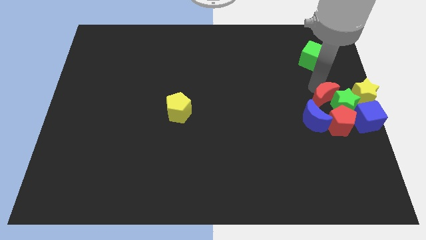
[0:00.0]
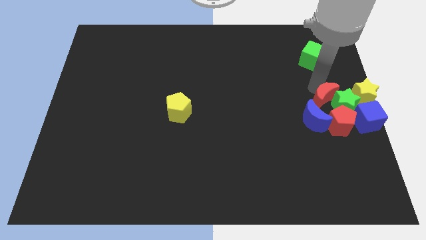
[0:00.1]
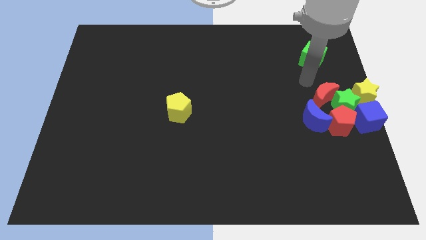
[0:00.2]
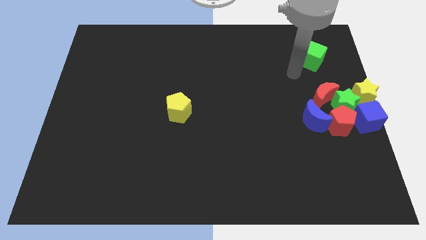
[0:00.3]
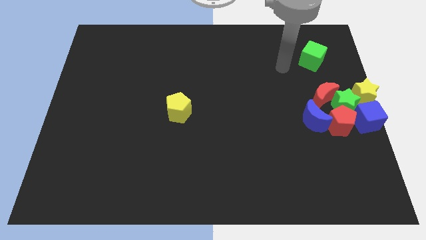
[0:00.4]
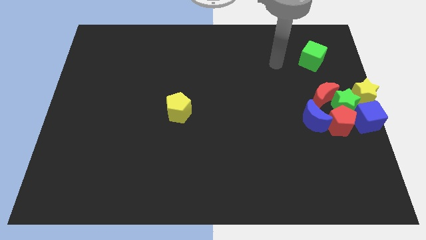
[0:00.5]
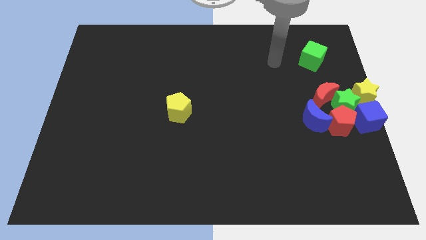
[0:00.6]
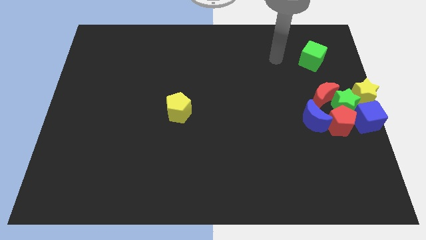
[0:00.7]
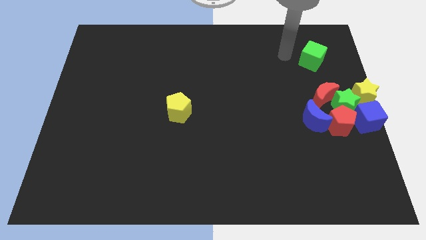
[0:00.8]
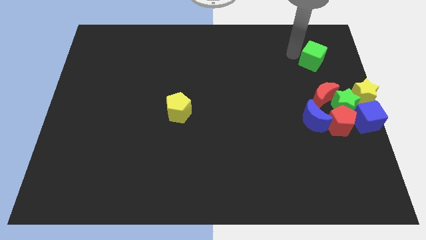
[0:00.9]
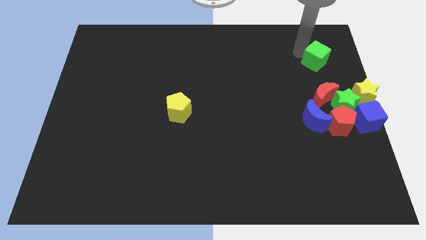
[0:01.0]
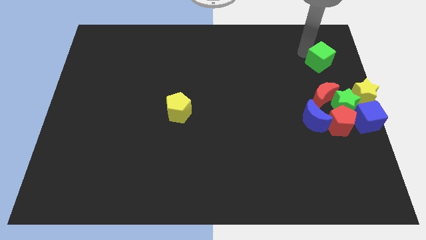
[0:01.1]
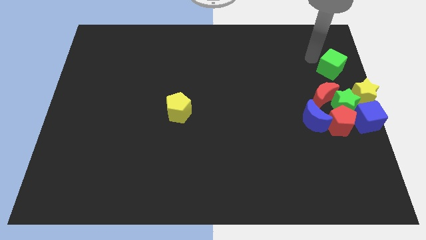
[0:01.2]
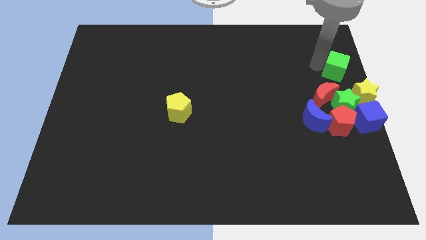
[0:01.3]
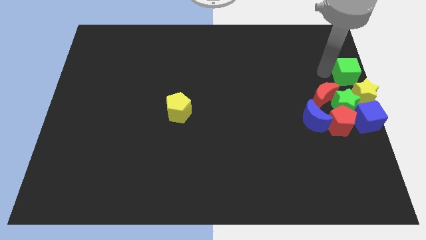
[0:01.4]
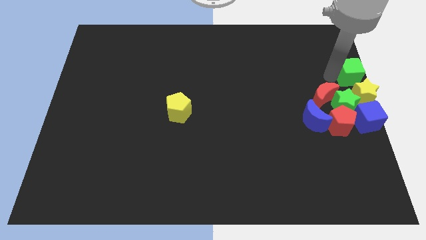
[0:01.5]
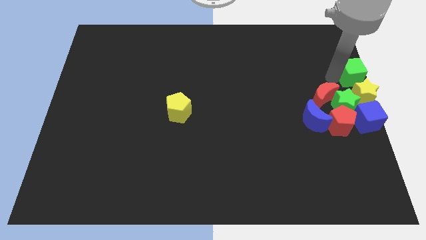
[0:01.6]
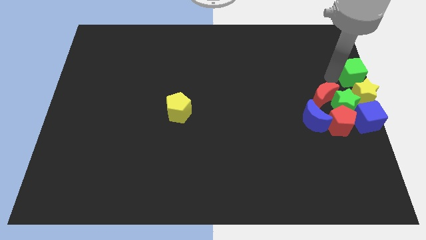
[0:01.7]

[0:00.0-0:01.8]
push green block towards the group of objects at the center right of the board

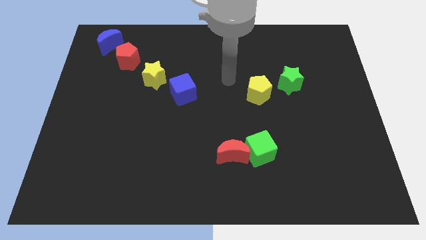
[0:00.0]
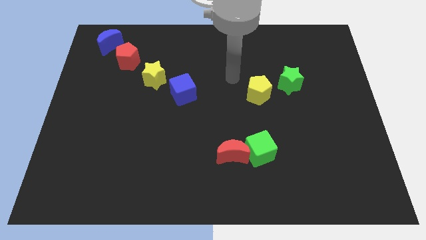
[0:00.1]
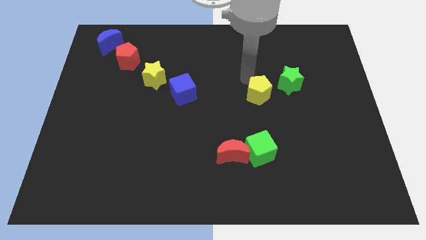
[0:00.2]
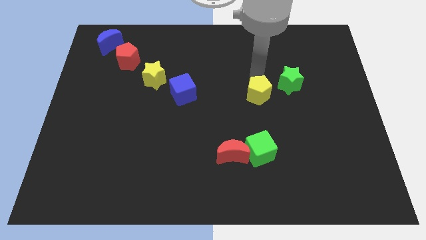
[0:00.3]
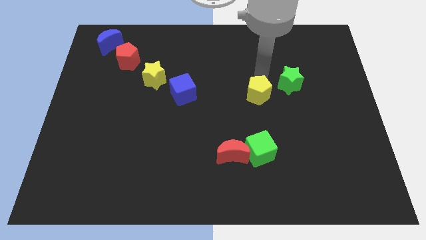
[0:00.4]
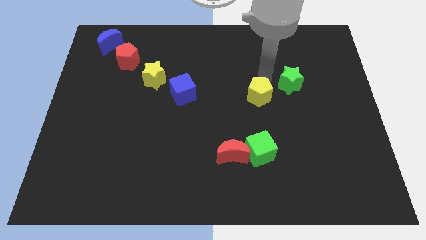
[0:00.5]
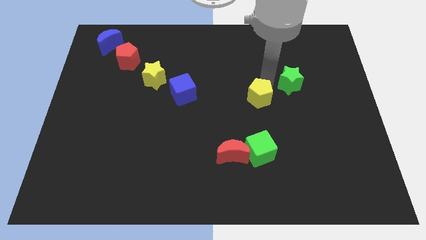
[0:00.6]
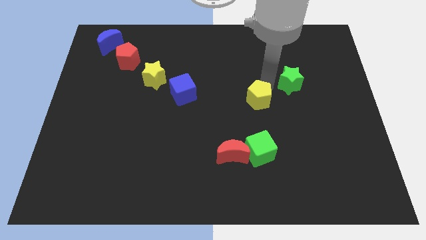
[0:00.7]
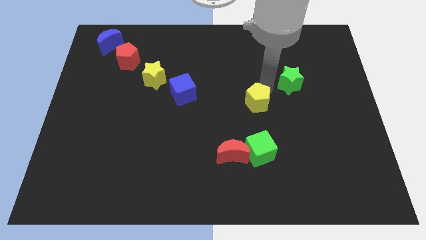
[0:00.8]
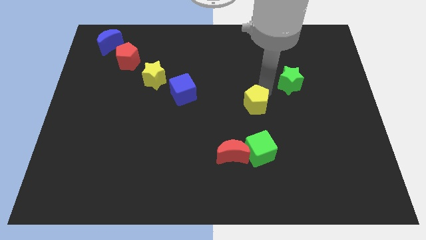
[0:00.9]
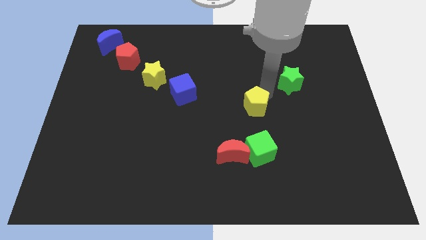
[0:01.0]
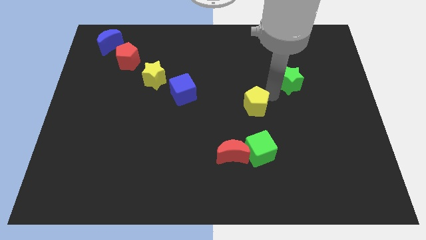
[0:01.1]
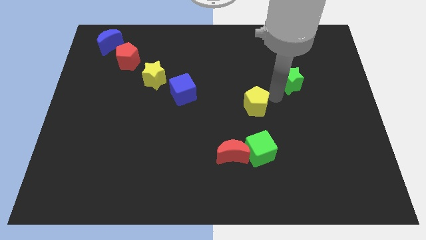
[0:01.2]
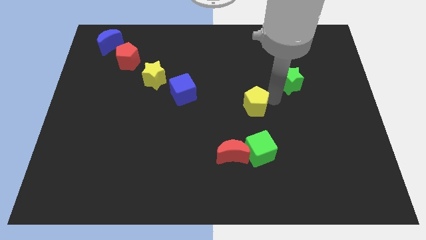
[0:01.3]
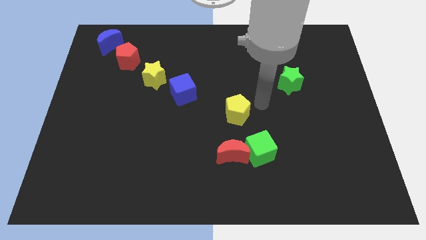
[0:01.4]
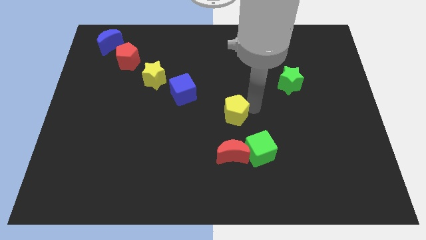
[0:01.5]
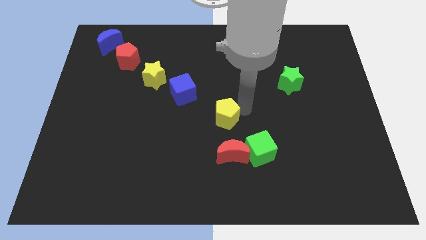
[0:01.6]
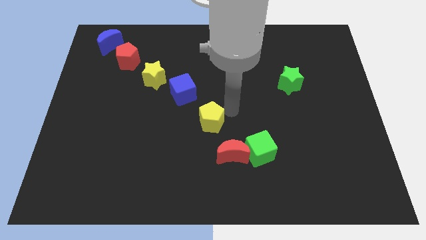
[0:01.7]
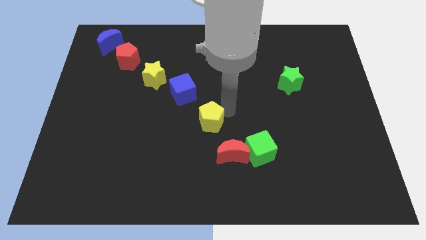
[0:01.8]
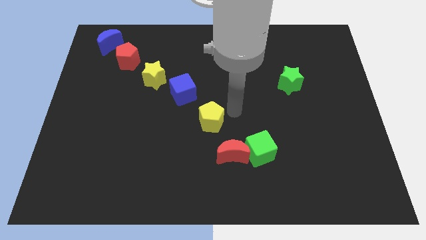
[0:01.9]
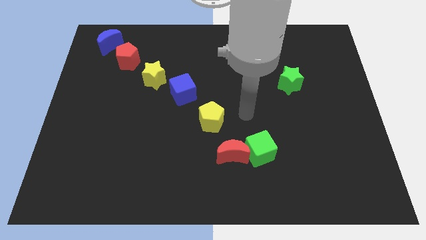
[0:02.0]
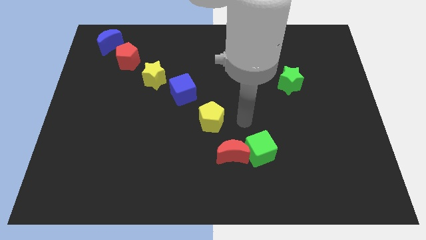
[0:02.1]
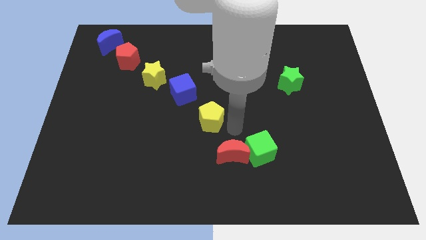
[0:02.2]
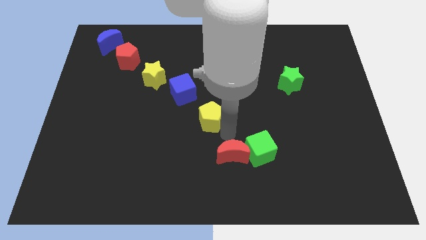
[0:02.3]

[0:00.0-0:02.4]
push yellow pentagon

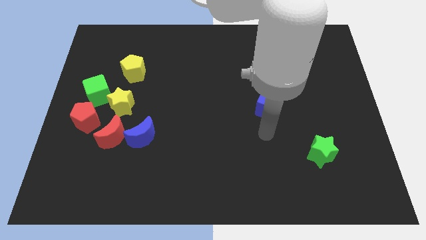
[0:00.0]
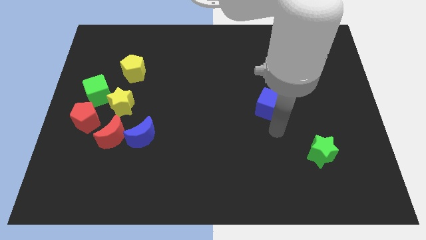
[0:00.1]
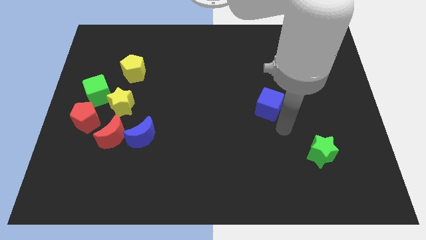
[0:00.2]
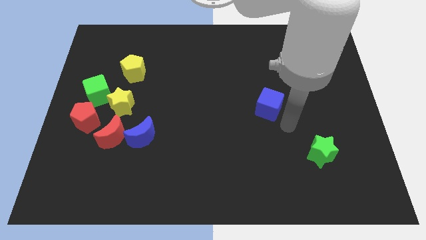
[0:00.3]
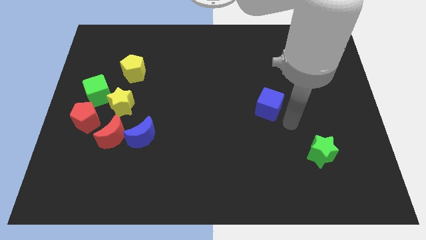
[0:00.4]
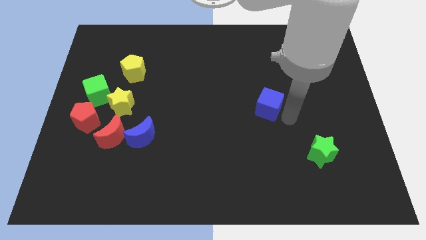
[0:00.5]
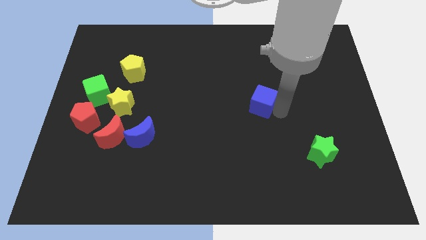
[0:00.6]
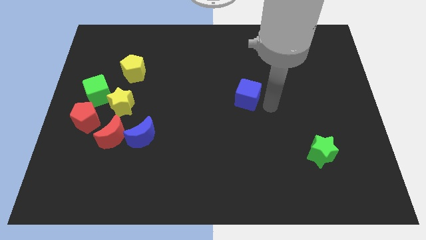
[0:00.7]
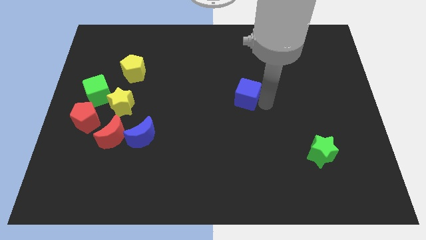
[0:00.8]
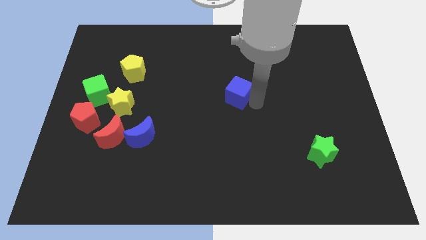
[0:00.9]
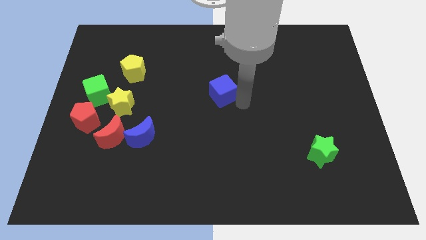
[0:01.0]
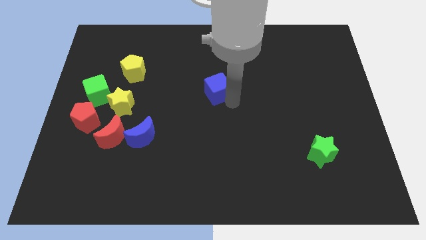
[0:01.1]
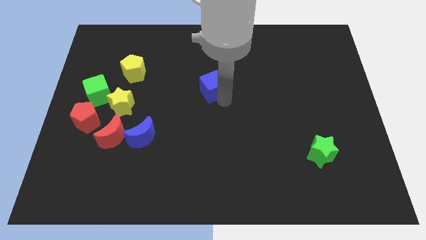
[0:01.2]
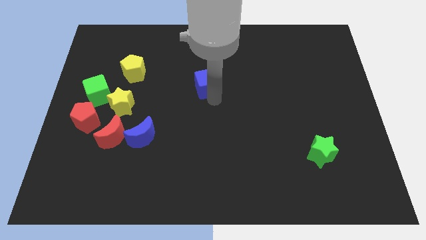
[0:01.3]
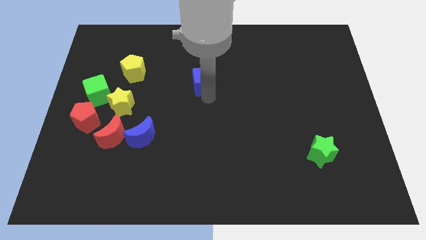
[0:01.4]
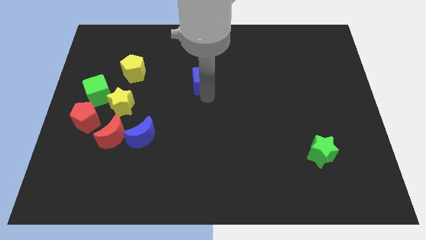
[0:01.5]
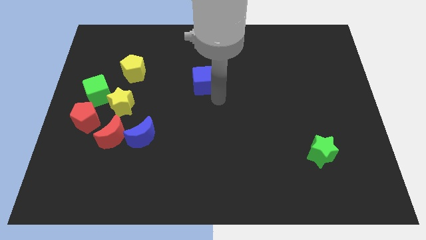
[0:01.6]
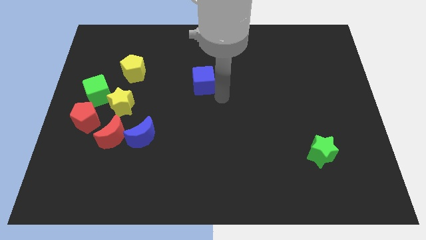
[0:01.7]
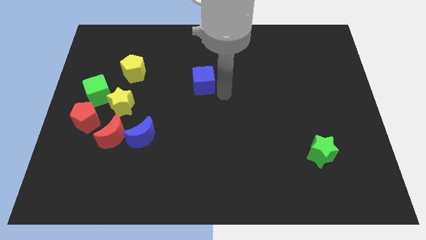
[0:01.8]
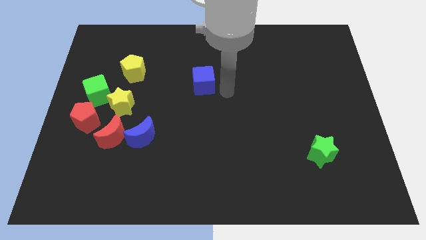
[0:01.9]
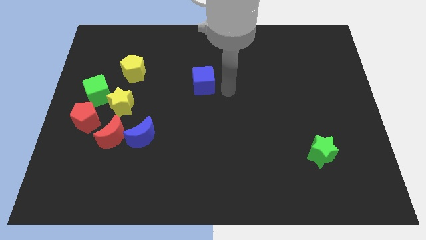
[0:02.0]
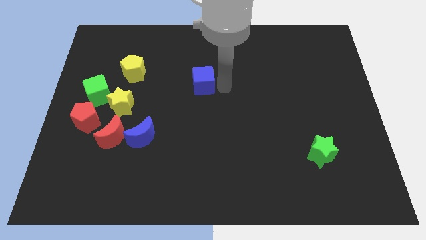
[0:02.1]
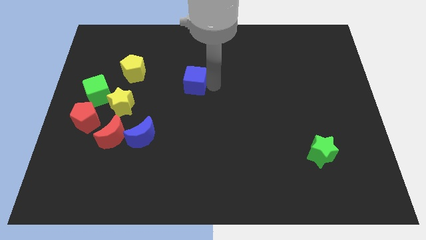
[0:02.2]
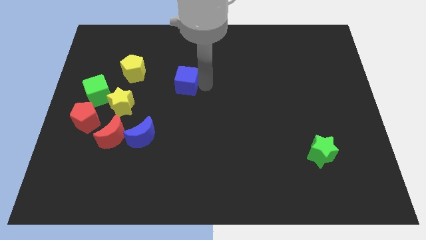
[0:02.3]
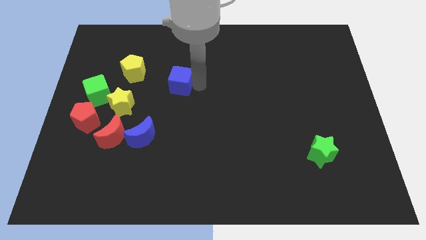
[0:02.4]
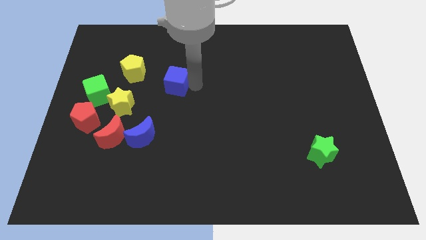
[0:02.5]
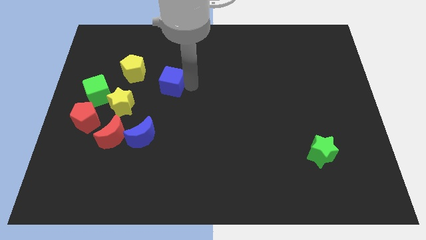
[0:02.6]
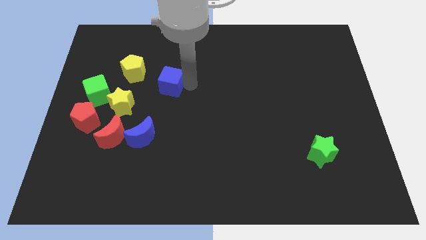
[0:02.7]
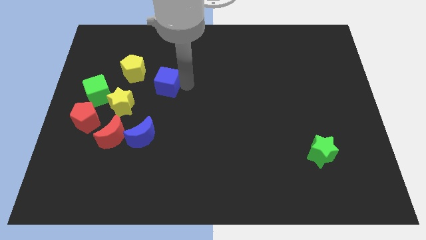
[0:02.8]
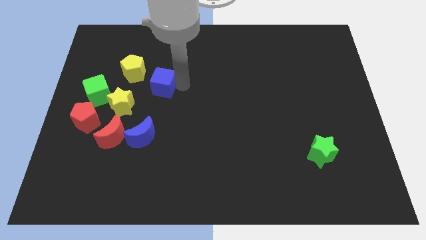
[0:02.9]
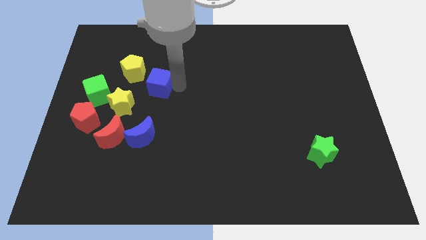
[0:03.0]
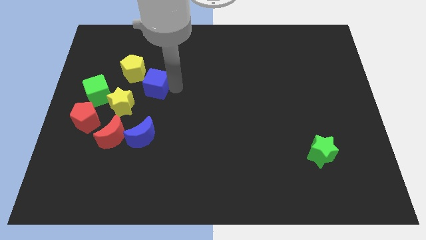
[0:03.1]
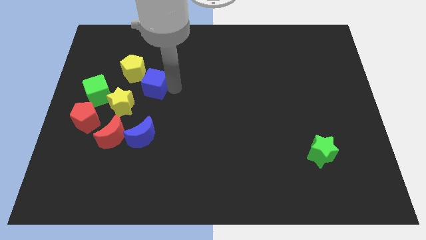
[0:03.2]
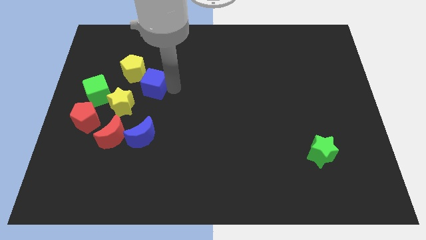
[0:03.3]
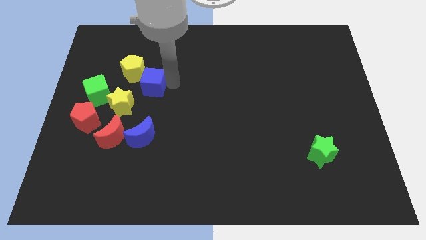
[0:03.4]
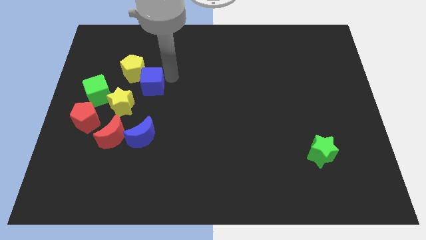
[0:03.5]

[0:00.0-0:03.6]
push the blue cube diagonally right of the yellow star

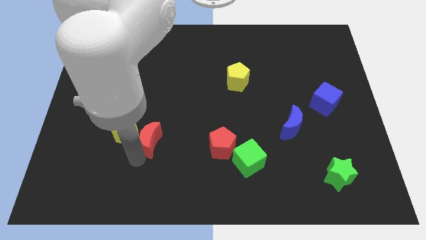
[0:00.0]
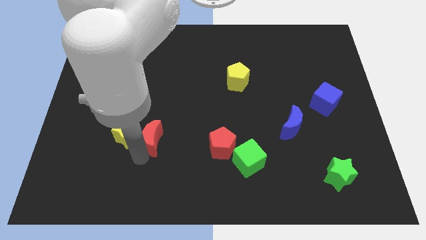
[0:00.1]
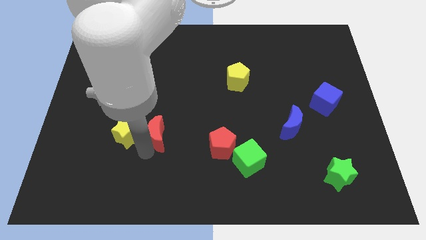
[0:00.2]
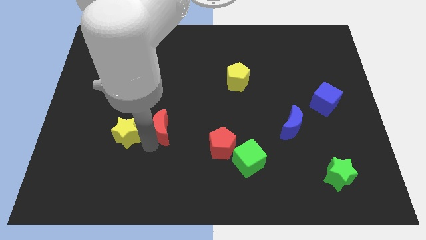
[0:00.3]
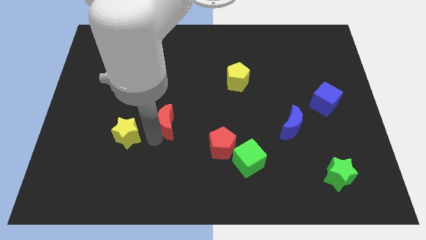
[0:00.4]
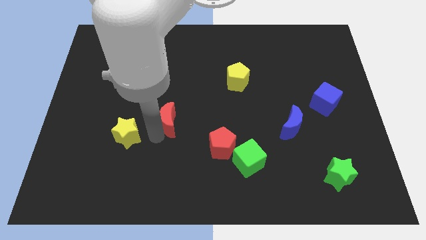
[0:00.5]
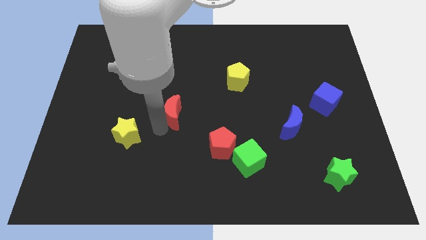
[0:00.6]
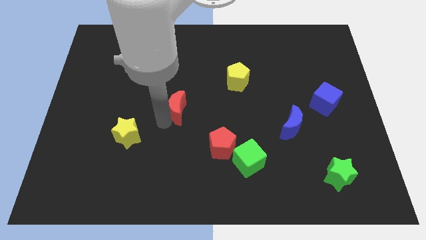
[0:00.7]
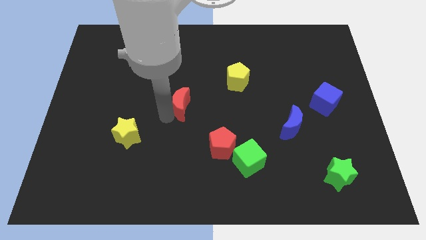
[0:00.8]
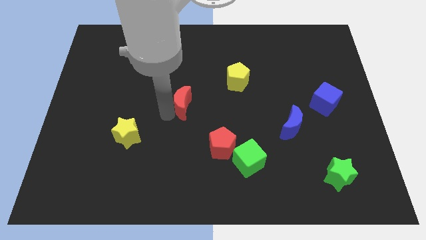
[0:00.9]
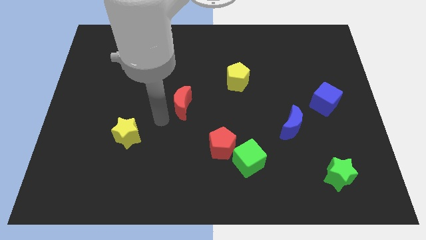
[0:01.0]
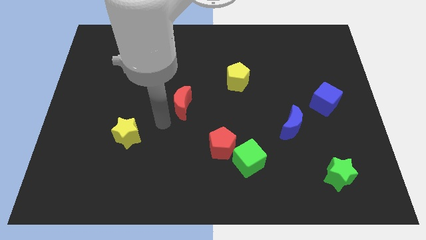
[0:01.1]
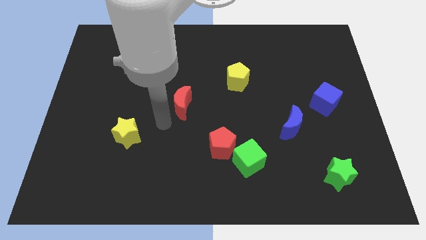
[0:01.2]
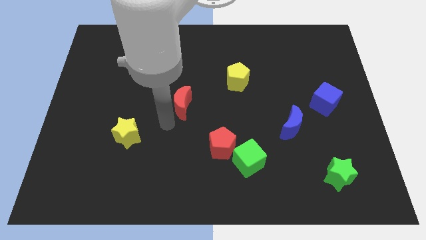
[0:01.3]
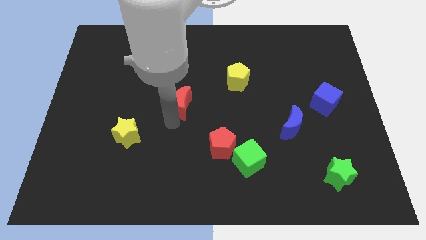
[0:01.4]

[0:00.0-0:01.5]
push red moon to the center of the board
